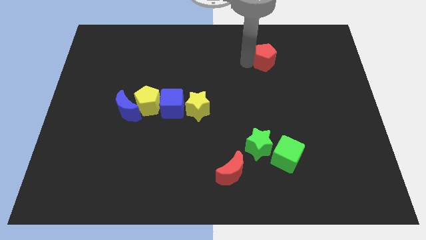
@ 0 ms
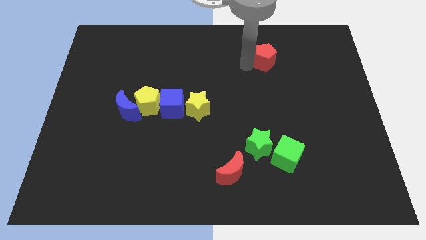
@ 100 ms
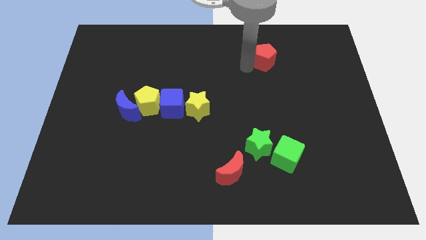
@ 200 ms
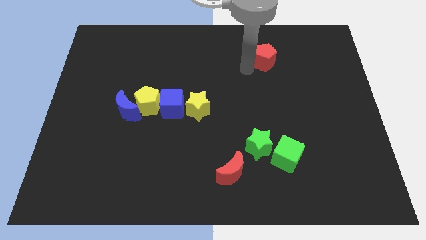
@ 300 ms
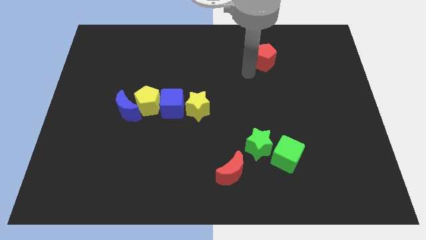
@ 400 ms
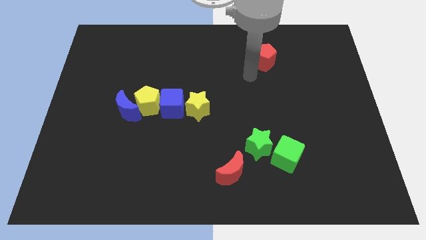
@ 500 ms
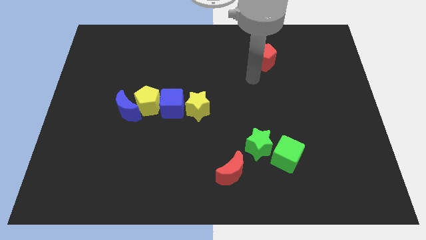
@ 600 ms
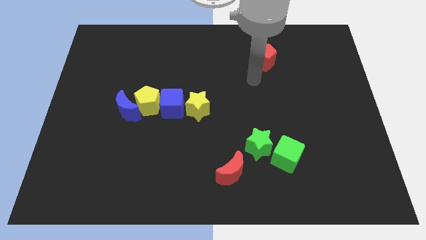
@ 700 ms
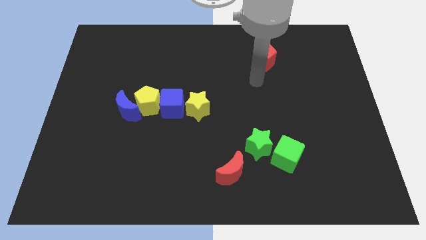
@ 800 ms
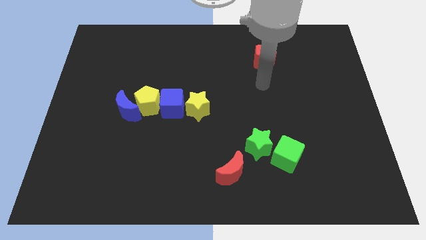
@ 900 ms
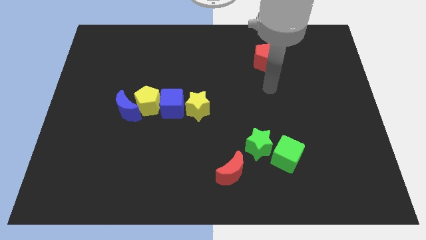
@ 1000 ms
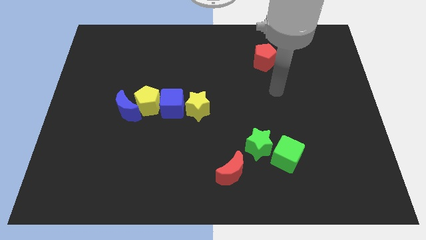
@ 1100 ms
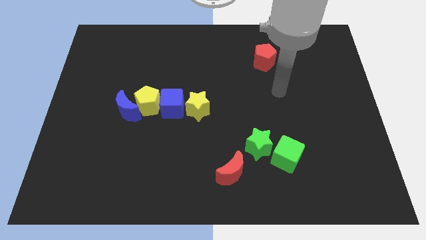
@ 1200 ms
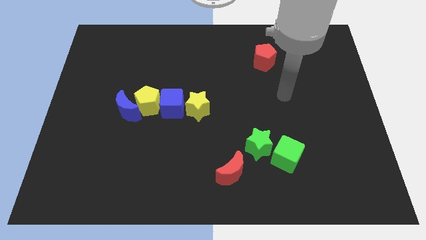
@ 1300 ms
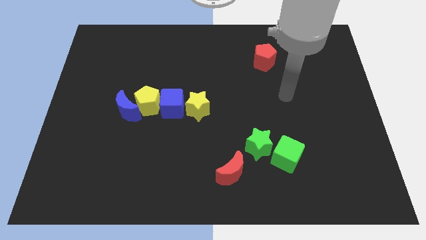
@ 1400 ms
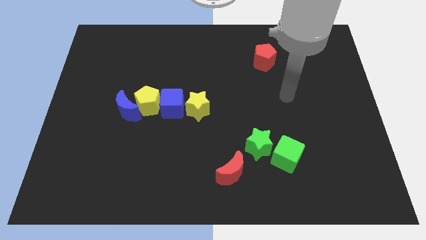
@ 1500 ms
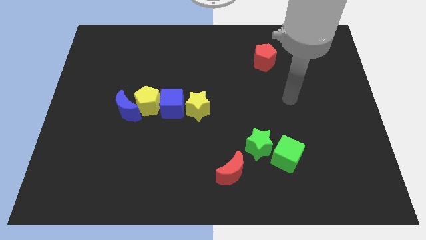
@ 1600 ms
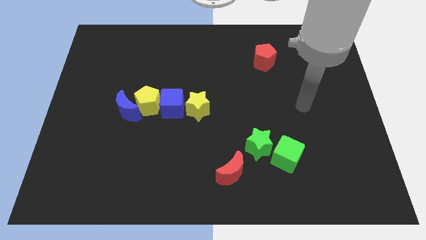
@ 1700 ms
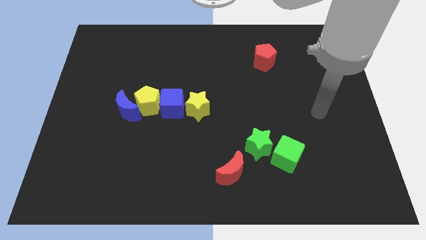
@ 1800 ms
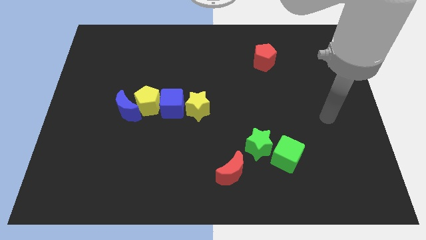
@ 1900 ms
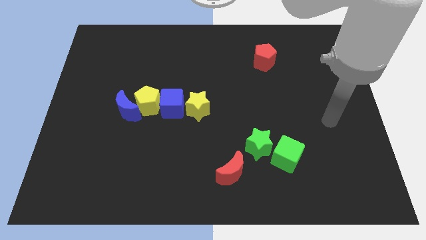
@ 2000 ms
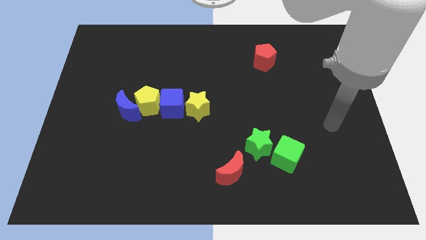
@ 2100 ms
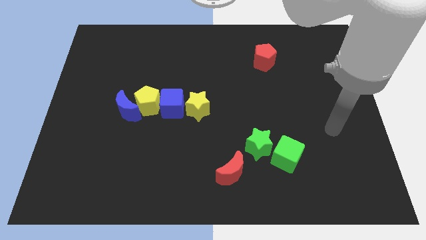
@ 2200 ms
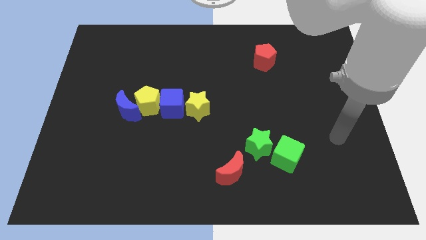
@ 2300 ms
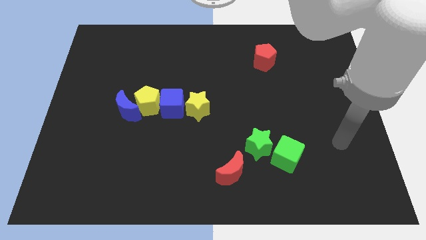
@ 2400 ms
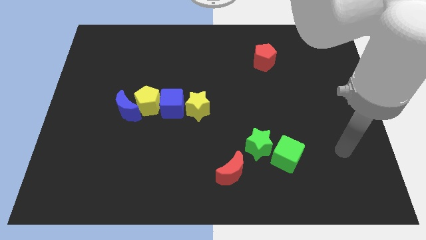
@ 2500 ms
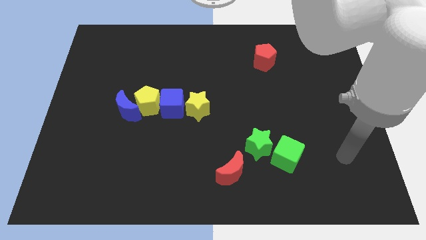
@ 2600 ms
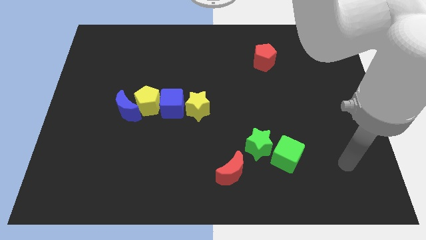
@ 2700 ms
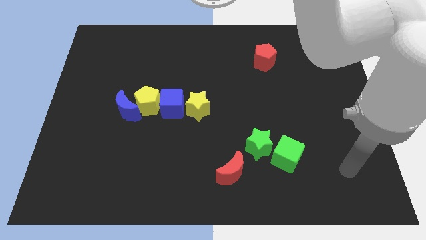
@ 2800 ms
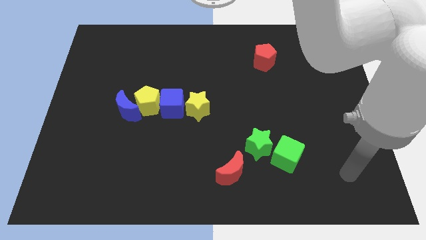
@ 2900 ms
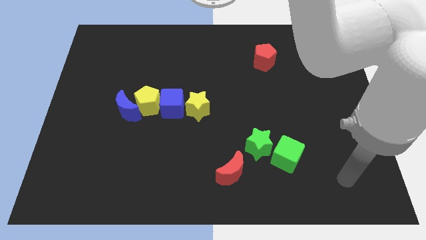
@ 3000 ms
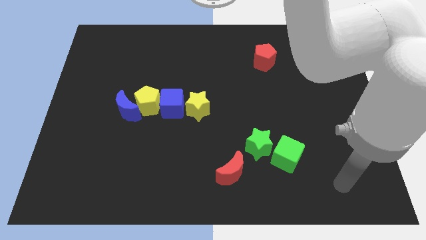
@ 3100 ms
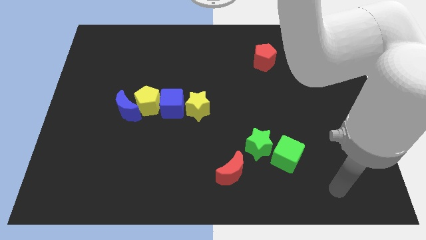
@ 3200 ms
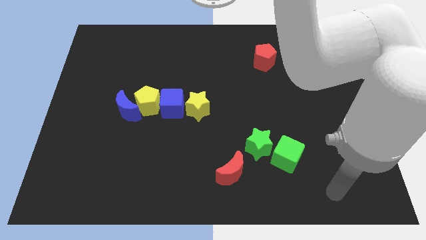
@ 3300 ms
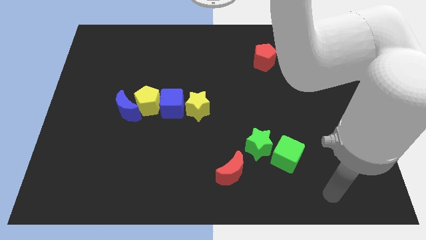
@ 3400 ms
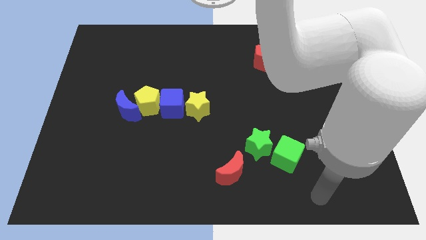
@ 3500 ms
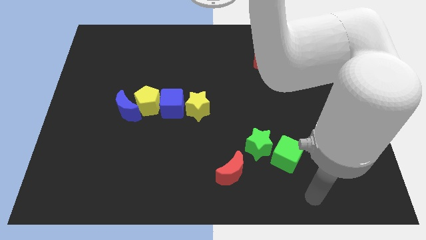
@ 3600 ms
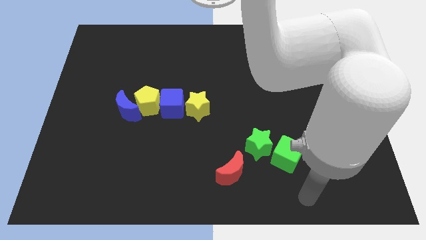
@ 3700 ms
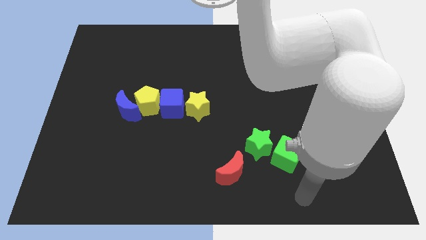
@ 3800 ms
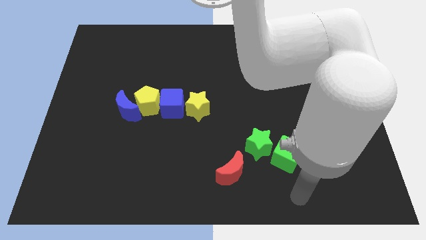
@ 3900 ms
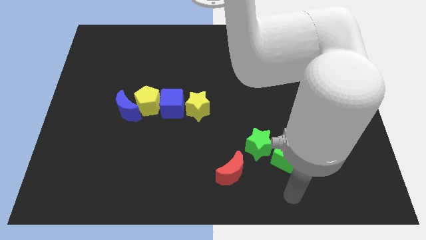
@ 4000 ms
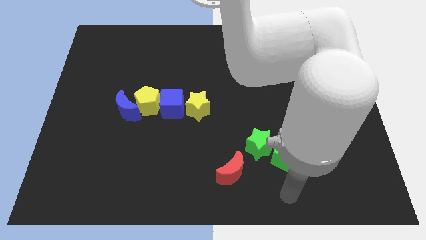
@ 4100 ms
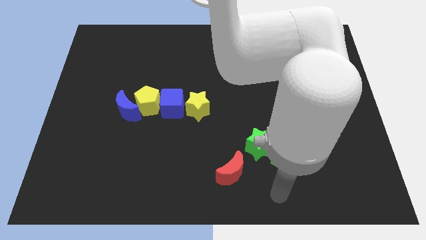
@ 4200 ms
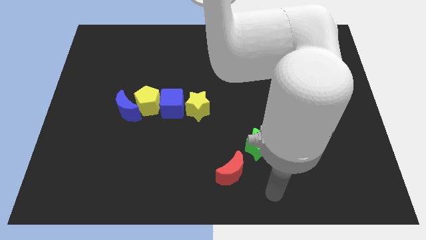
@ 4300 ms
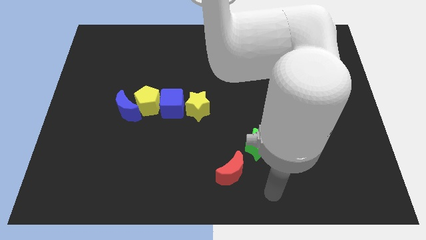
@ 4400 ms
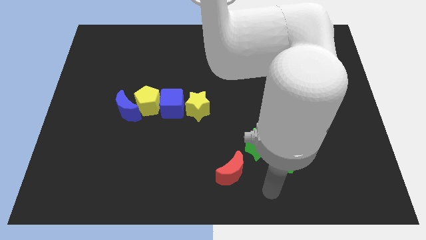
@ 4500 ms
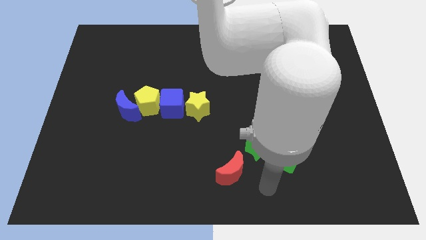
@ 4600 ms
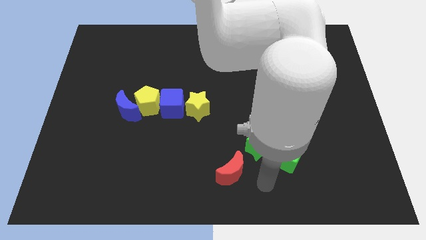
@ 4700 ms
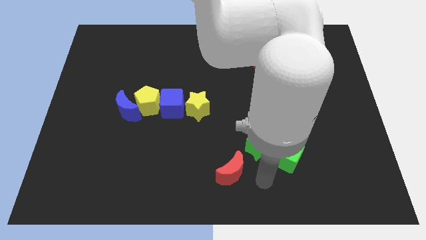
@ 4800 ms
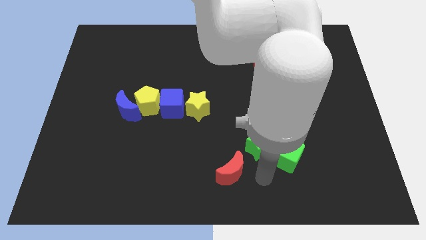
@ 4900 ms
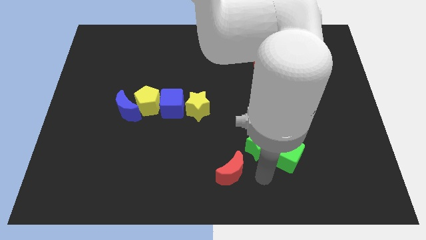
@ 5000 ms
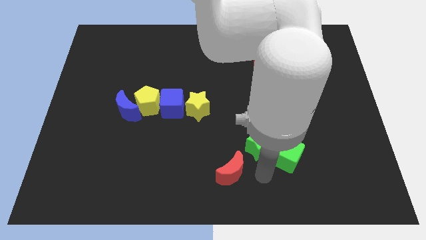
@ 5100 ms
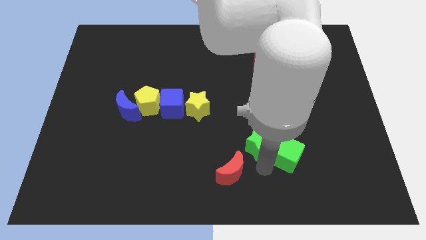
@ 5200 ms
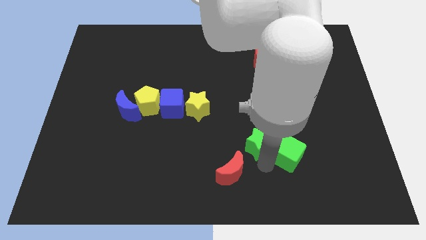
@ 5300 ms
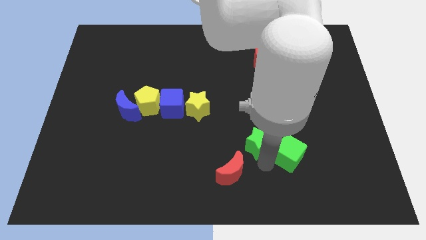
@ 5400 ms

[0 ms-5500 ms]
touch the bottom side of the green blocks

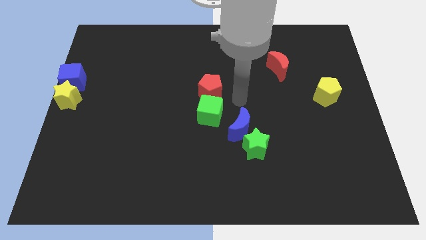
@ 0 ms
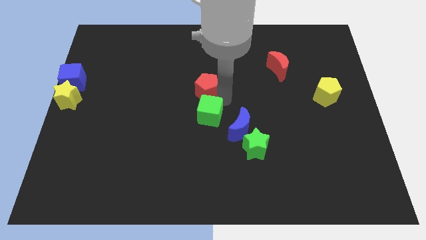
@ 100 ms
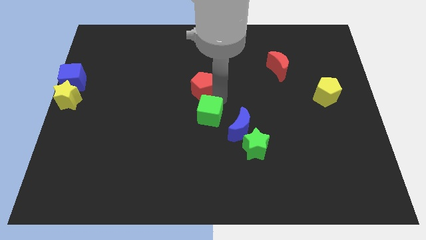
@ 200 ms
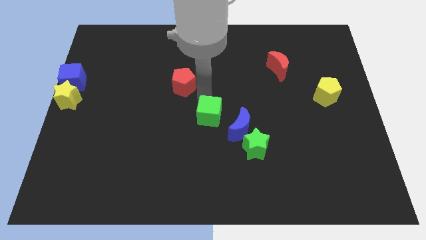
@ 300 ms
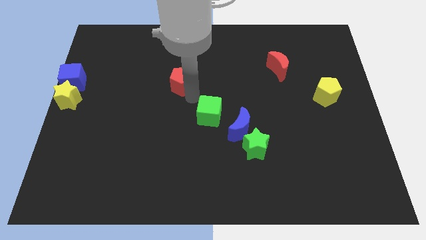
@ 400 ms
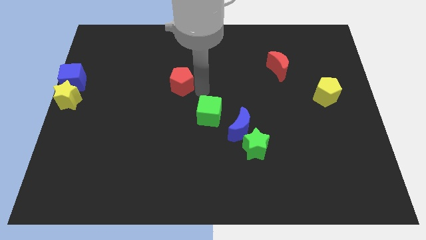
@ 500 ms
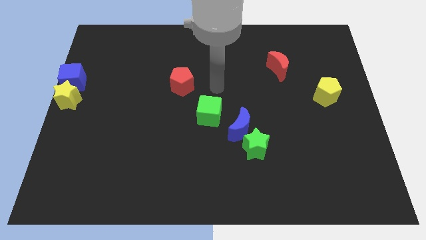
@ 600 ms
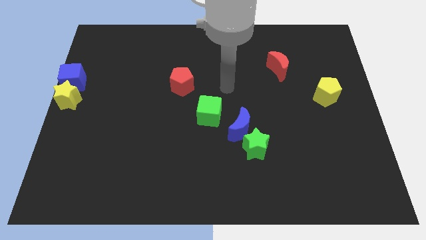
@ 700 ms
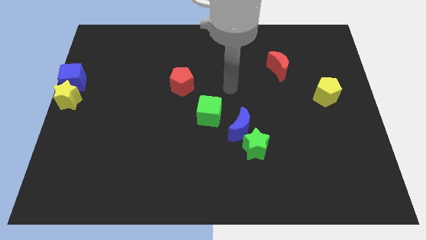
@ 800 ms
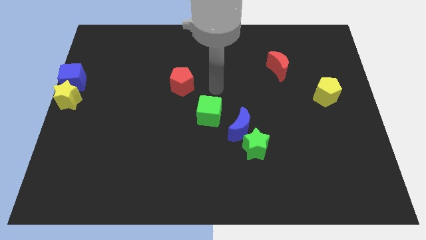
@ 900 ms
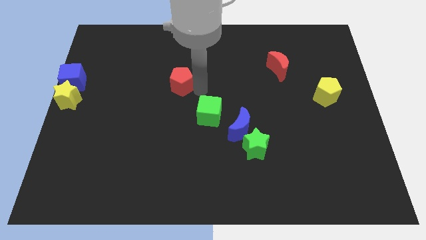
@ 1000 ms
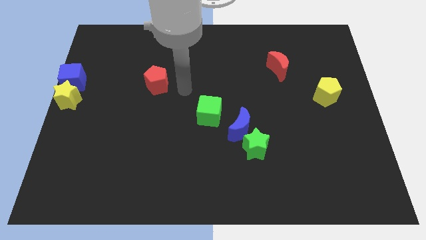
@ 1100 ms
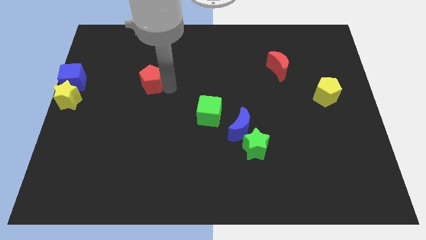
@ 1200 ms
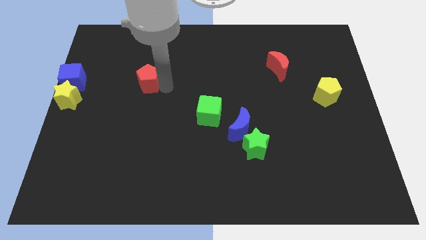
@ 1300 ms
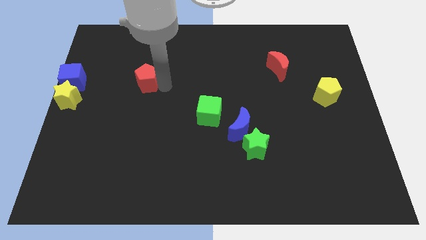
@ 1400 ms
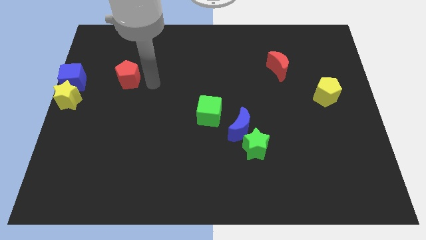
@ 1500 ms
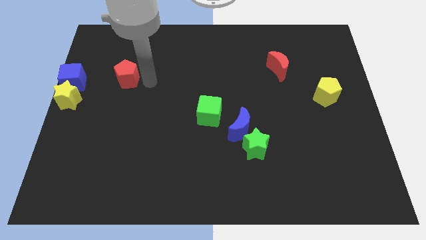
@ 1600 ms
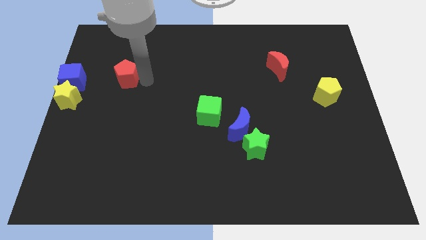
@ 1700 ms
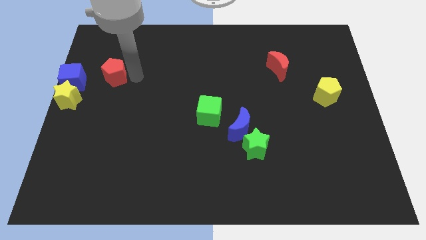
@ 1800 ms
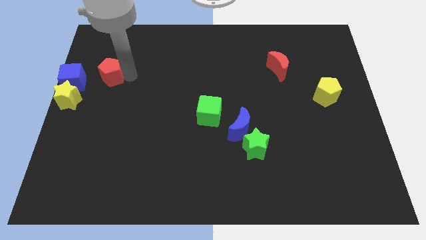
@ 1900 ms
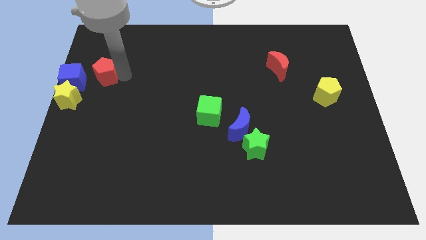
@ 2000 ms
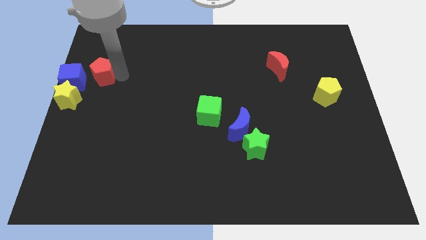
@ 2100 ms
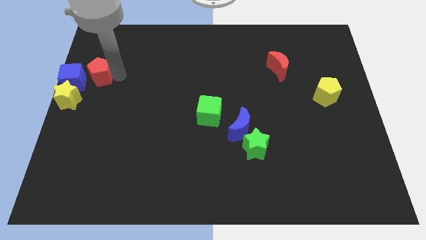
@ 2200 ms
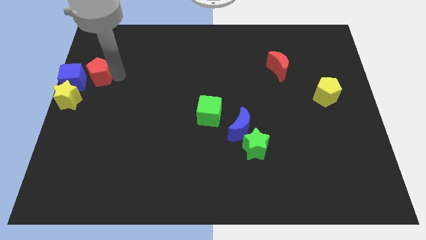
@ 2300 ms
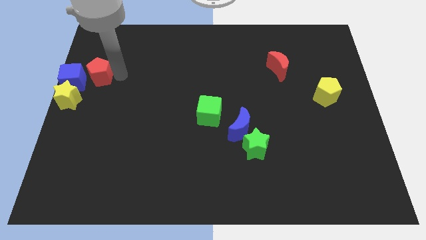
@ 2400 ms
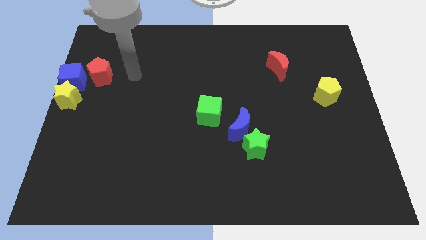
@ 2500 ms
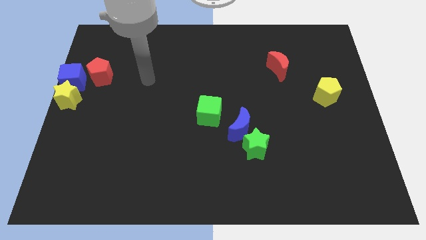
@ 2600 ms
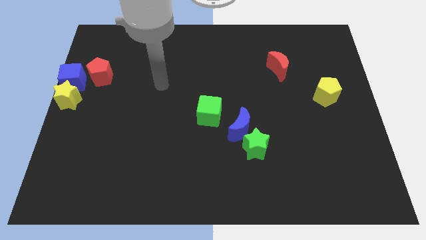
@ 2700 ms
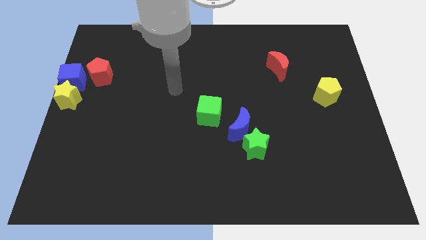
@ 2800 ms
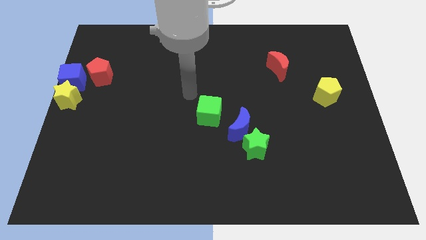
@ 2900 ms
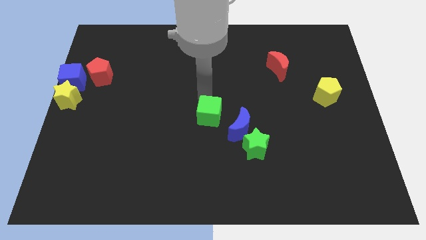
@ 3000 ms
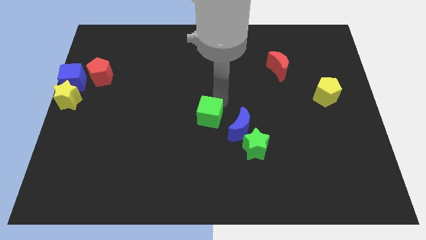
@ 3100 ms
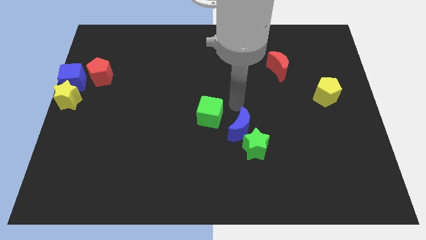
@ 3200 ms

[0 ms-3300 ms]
move the red pentagon to the right side of the blue cube
